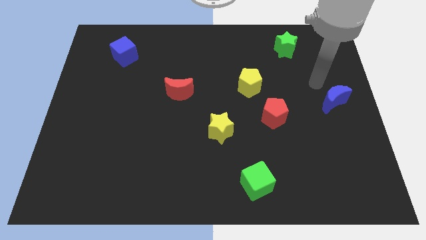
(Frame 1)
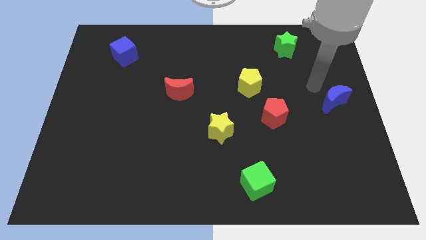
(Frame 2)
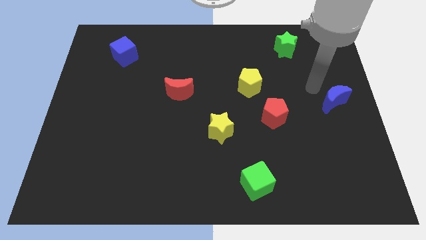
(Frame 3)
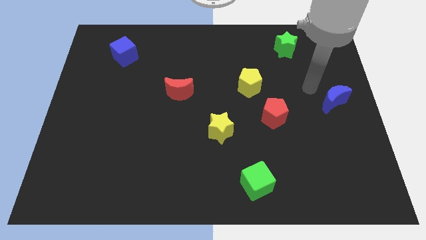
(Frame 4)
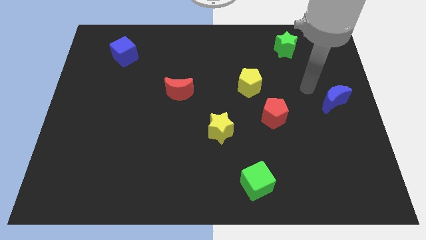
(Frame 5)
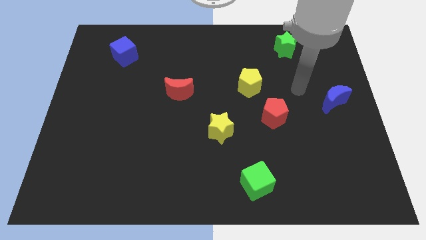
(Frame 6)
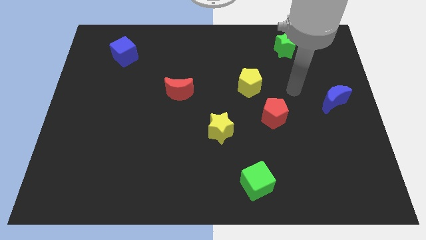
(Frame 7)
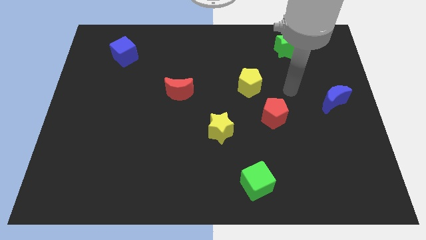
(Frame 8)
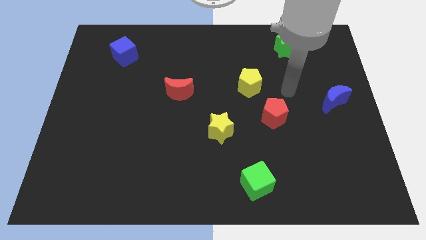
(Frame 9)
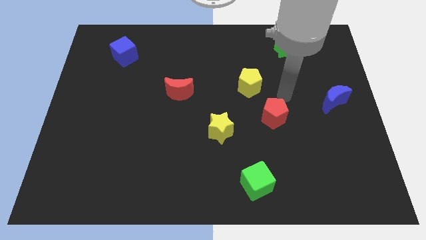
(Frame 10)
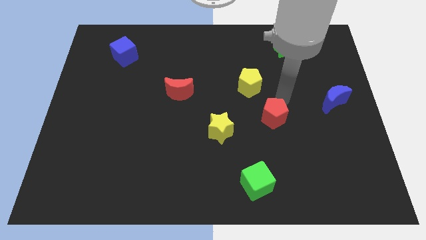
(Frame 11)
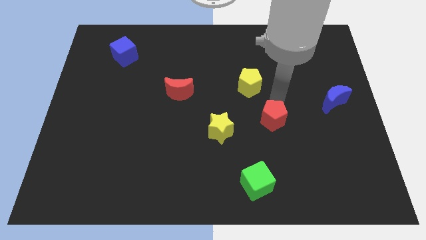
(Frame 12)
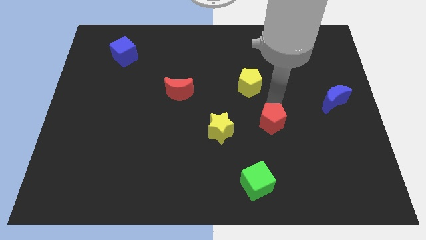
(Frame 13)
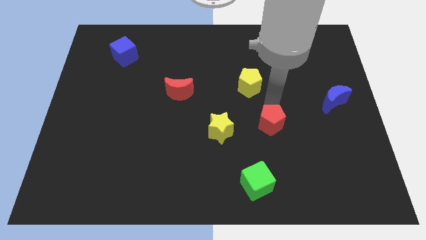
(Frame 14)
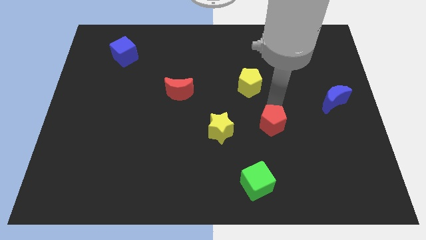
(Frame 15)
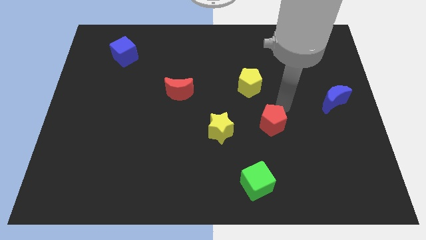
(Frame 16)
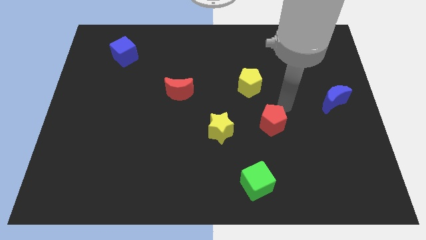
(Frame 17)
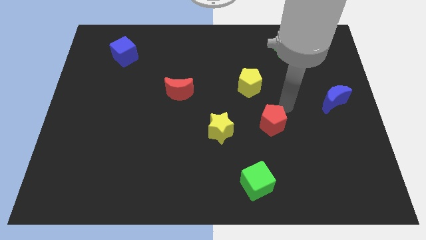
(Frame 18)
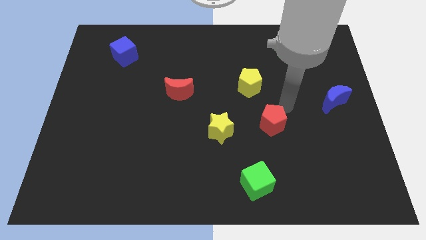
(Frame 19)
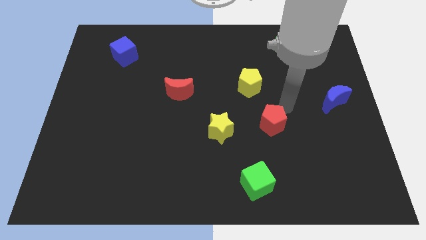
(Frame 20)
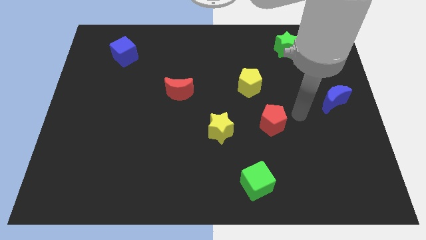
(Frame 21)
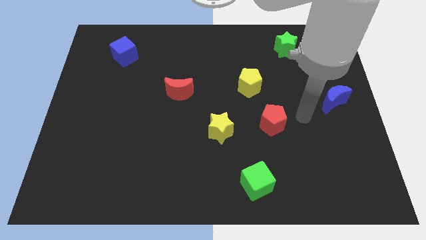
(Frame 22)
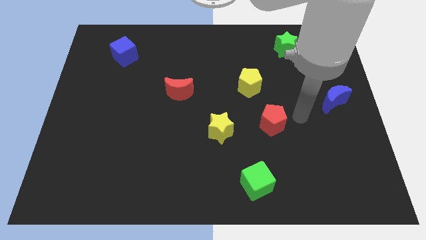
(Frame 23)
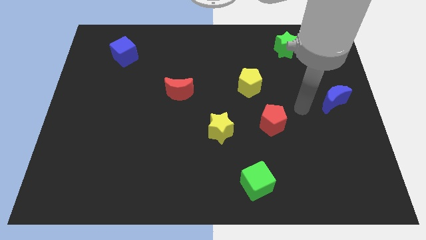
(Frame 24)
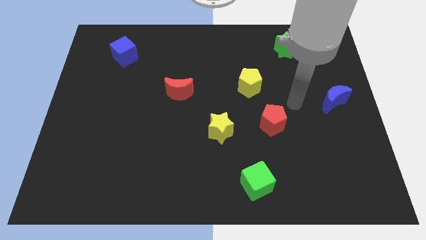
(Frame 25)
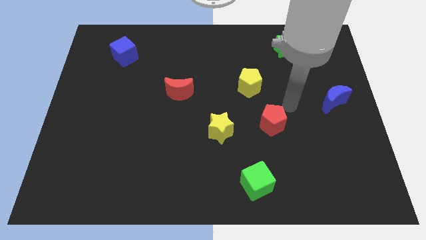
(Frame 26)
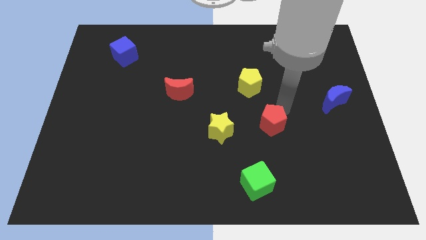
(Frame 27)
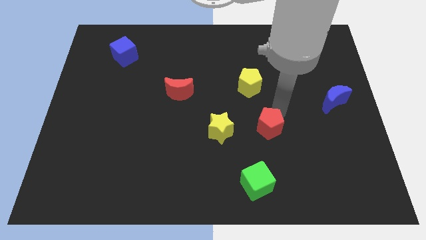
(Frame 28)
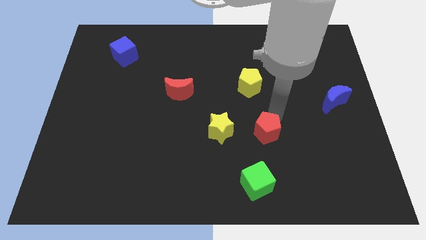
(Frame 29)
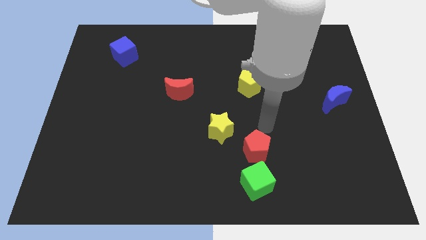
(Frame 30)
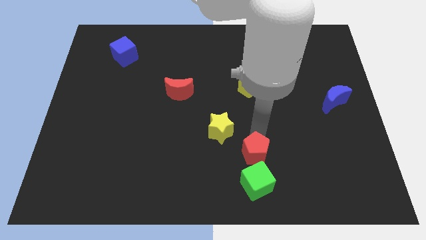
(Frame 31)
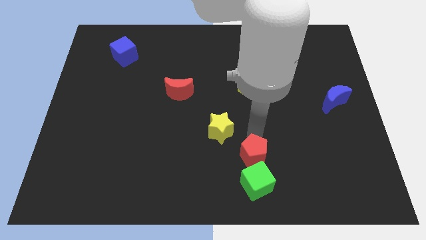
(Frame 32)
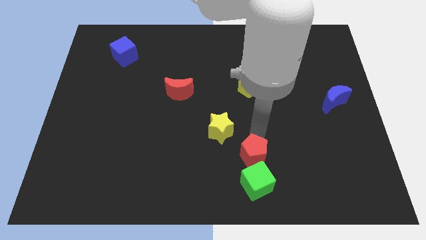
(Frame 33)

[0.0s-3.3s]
push the red pentagon into the green cube

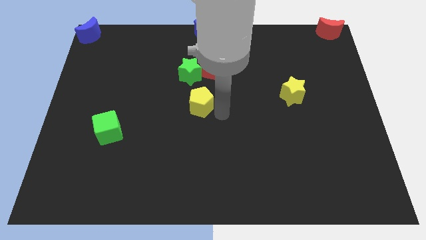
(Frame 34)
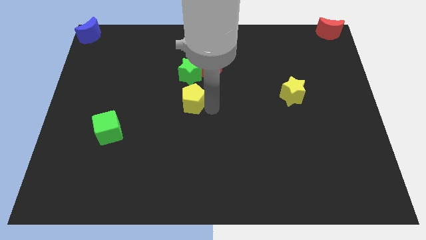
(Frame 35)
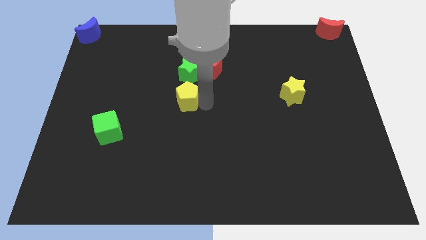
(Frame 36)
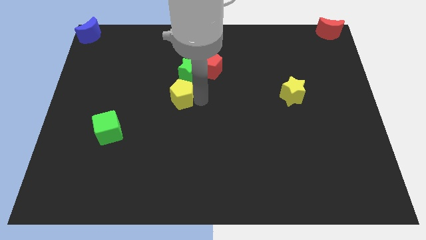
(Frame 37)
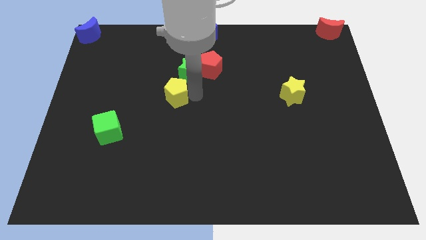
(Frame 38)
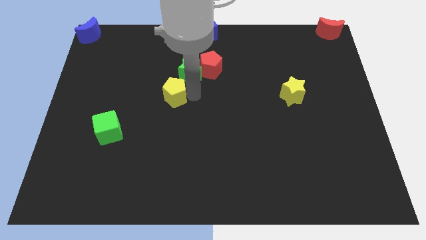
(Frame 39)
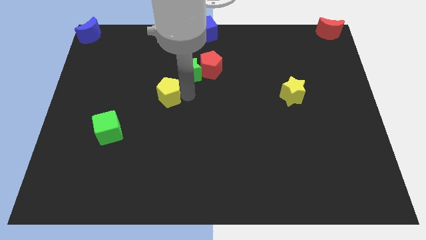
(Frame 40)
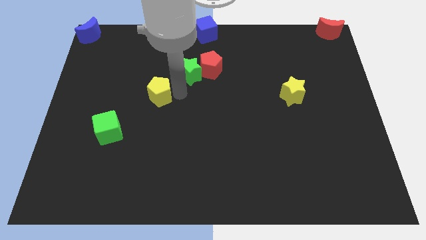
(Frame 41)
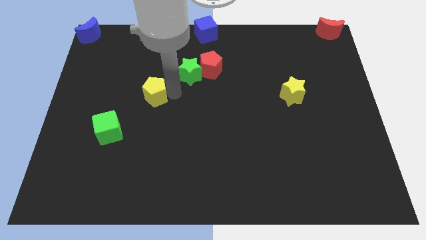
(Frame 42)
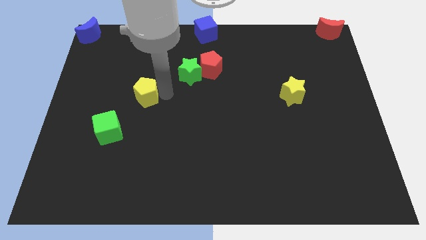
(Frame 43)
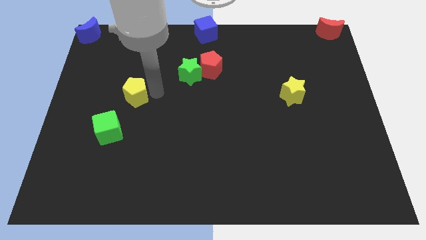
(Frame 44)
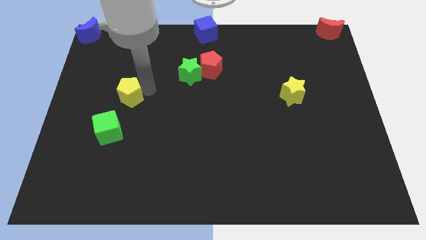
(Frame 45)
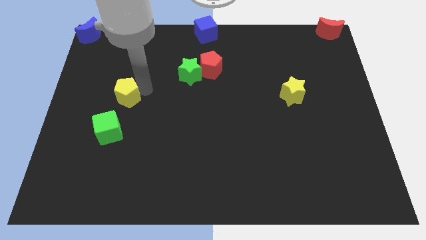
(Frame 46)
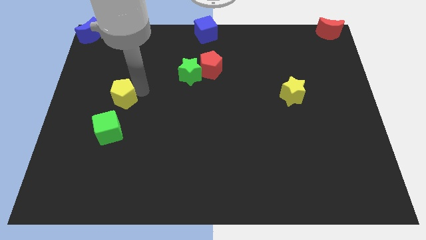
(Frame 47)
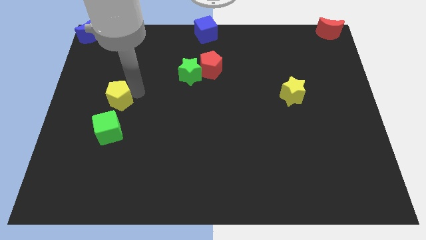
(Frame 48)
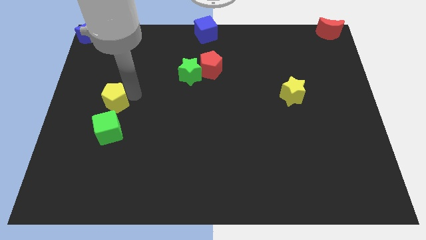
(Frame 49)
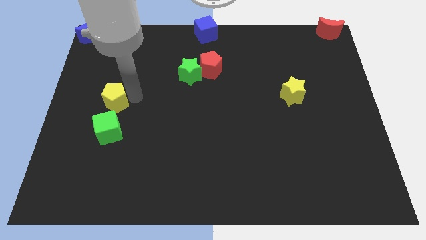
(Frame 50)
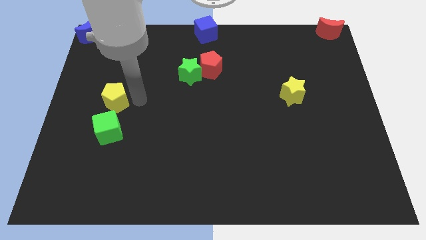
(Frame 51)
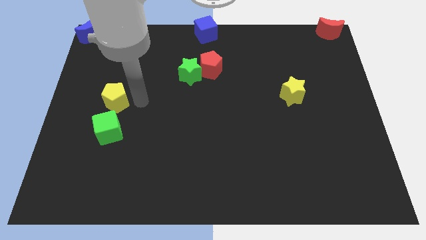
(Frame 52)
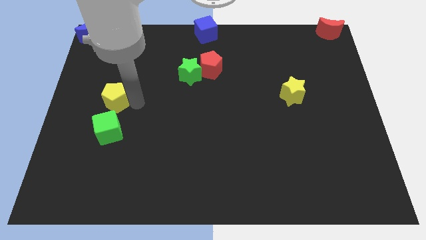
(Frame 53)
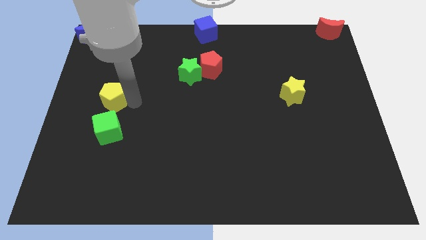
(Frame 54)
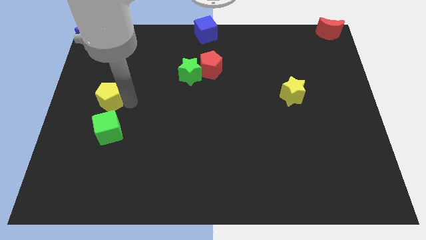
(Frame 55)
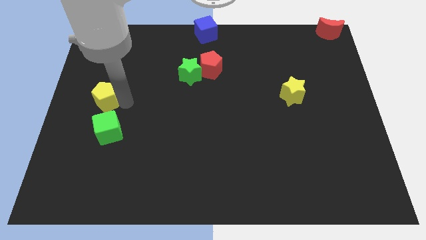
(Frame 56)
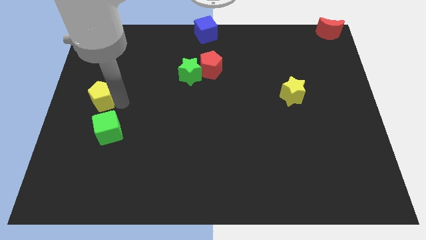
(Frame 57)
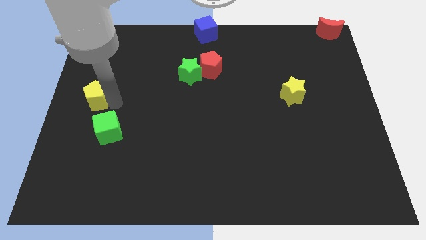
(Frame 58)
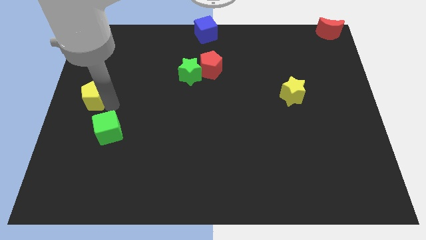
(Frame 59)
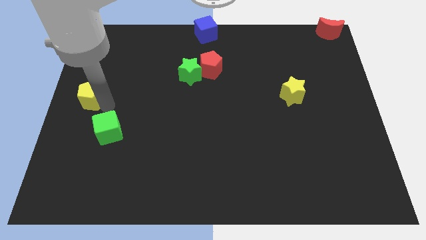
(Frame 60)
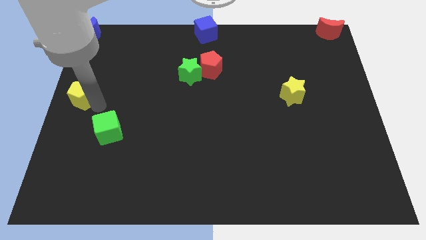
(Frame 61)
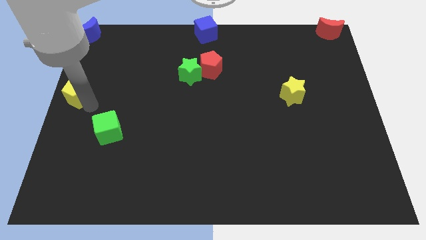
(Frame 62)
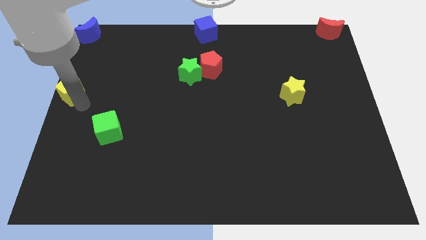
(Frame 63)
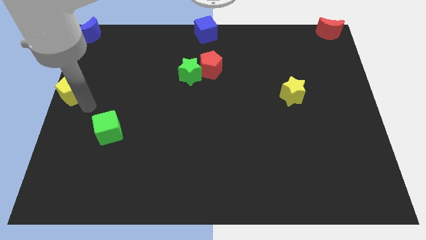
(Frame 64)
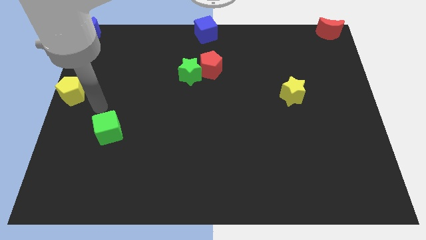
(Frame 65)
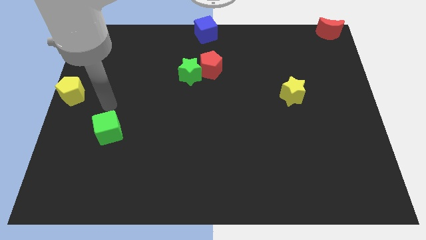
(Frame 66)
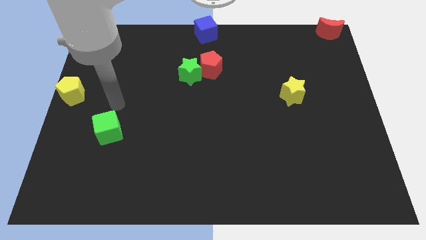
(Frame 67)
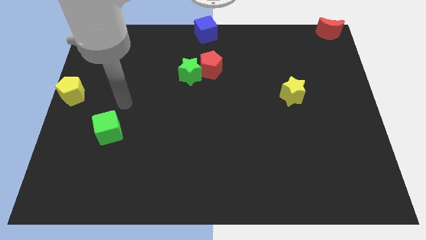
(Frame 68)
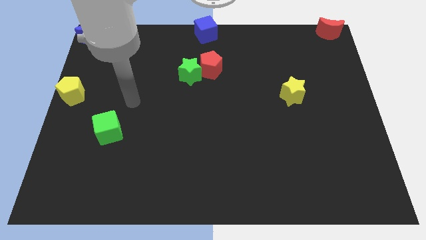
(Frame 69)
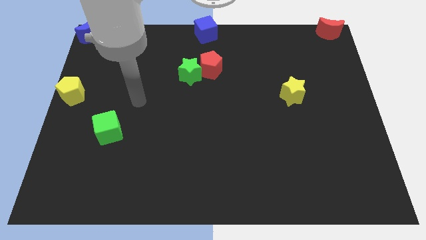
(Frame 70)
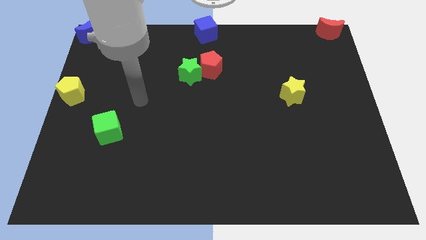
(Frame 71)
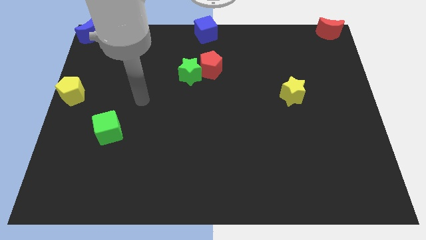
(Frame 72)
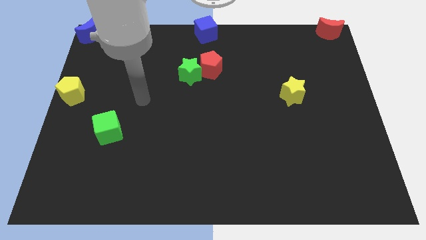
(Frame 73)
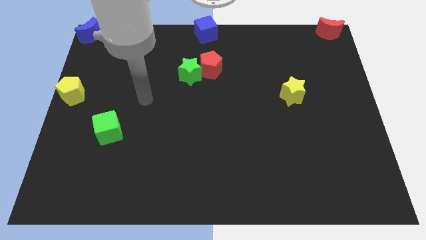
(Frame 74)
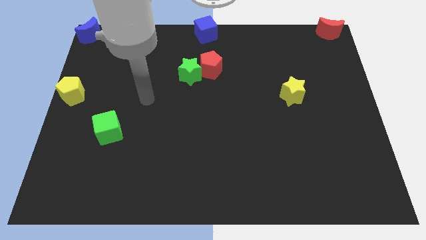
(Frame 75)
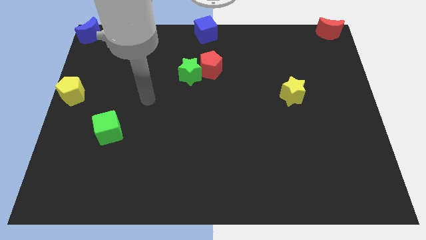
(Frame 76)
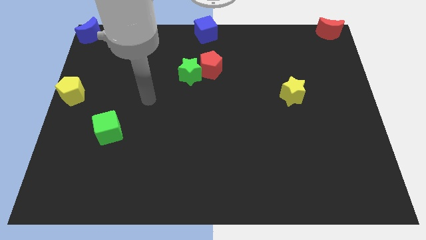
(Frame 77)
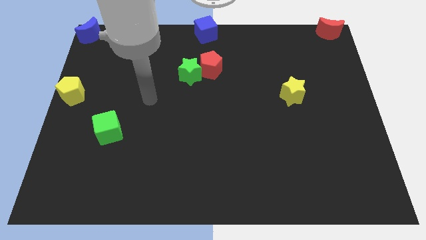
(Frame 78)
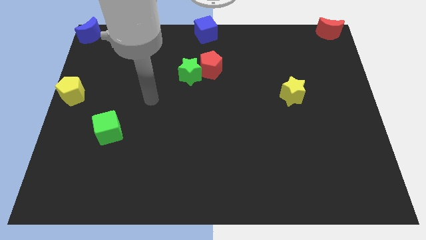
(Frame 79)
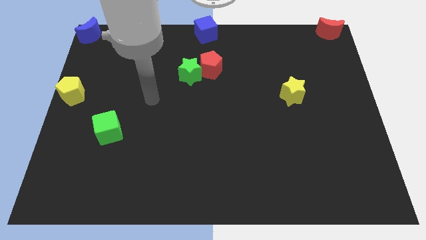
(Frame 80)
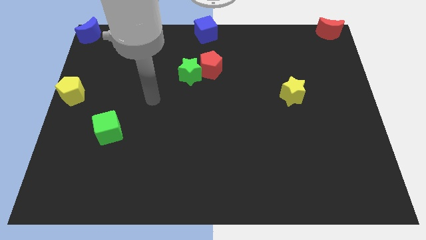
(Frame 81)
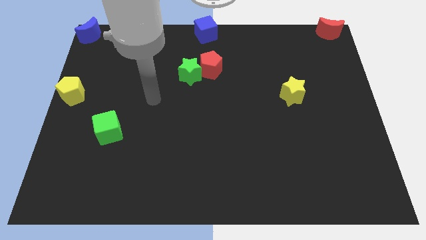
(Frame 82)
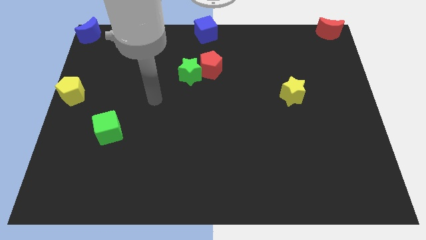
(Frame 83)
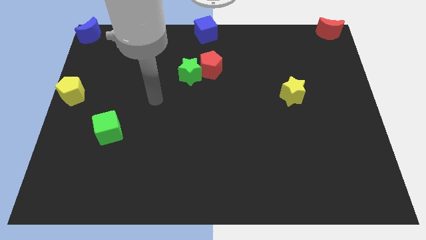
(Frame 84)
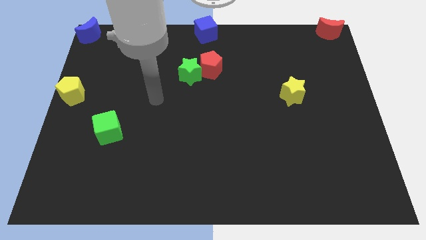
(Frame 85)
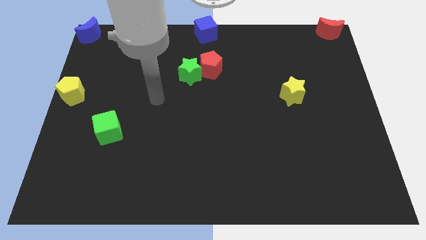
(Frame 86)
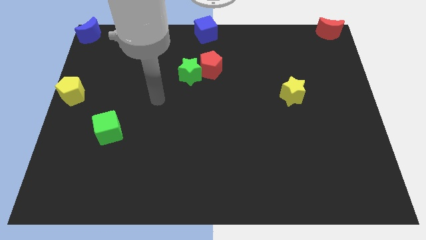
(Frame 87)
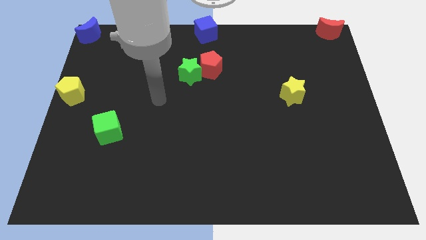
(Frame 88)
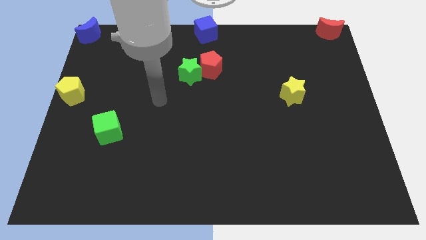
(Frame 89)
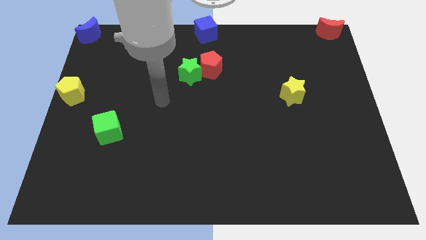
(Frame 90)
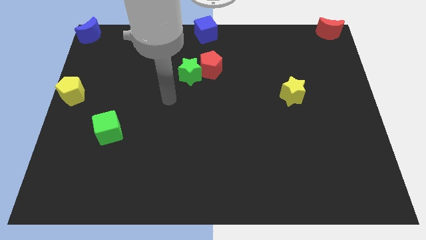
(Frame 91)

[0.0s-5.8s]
push the yellow pentagon to the center left of the board

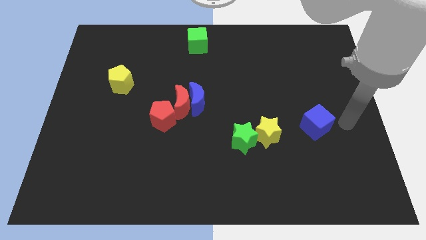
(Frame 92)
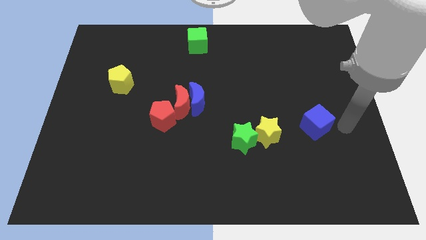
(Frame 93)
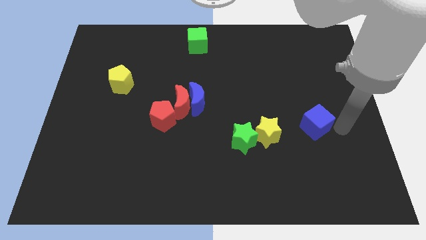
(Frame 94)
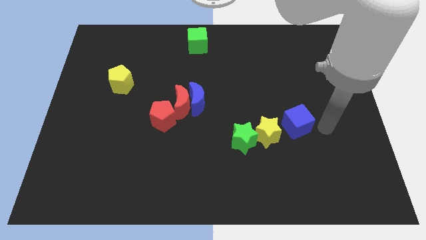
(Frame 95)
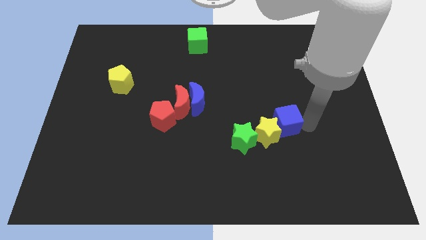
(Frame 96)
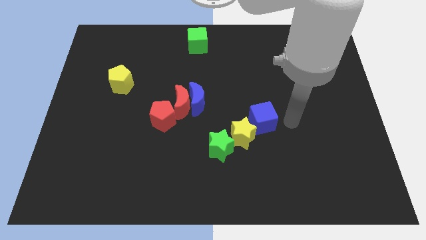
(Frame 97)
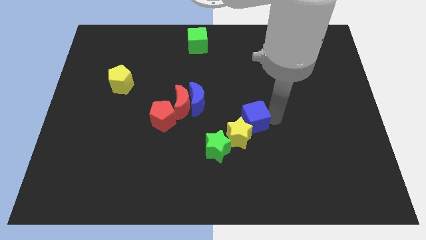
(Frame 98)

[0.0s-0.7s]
push the blue cube into yellow star
